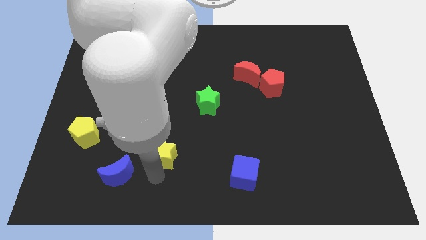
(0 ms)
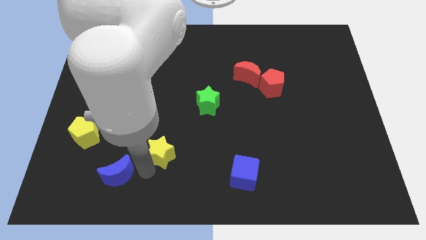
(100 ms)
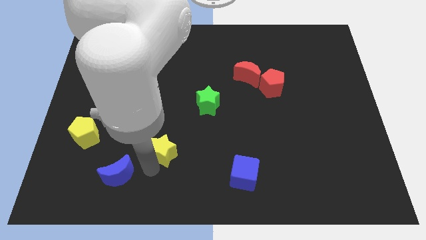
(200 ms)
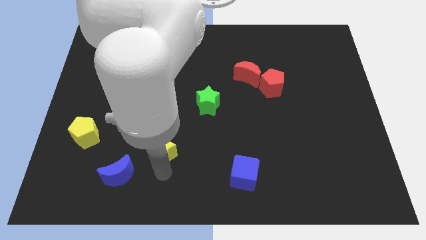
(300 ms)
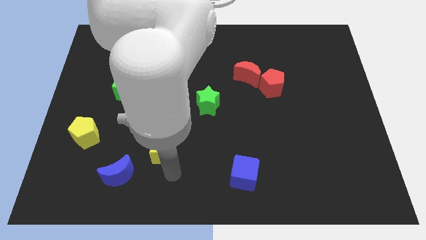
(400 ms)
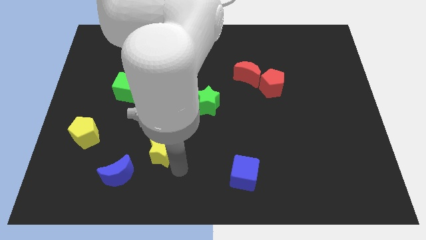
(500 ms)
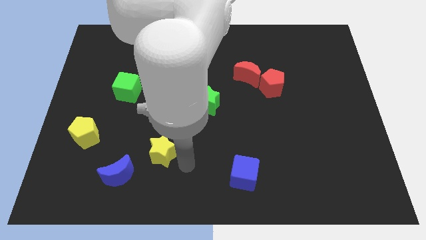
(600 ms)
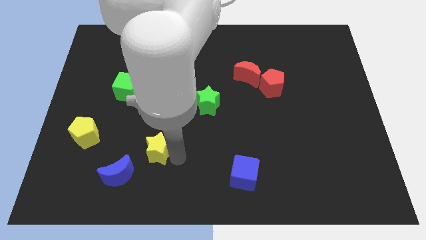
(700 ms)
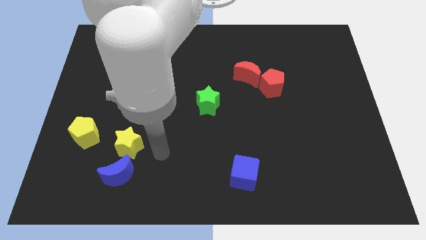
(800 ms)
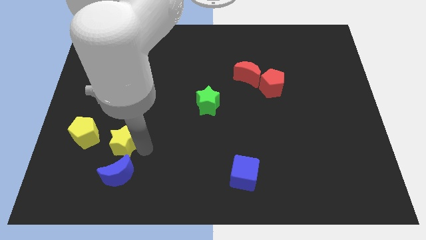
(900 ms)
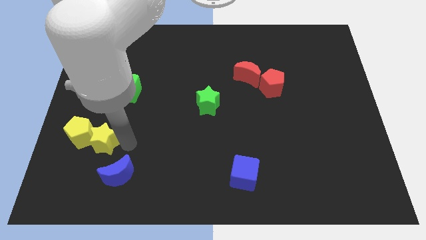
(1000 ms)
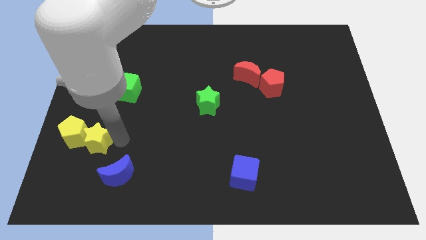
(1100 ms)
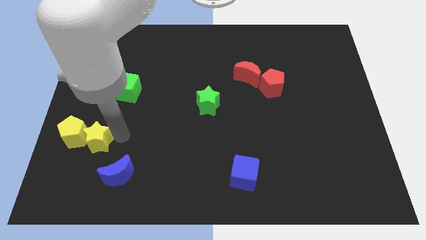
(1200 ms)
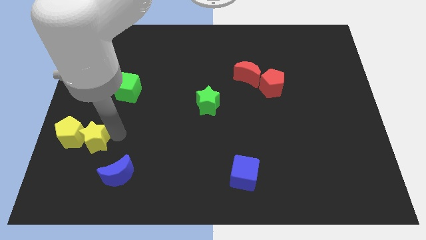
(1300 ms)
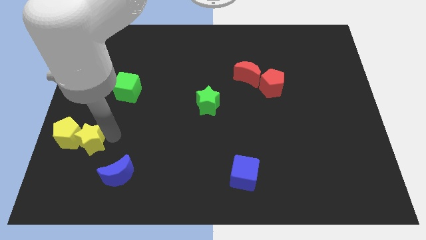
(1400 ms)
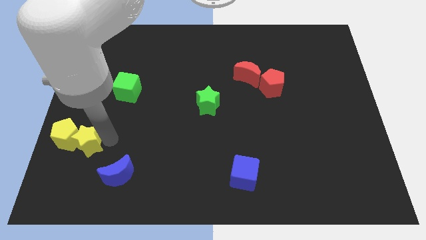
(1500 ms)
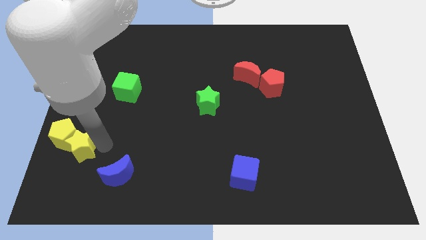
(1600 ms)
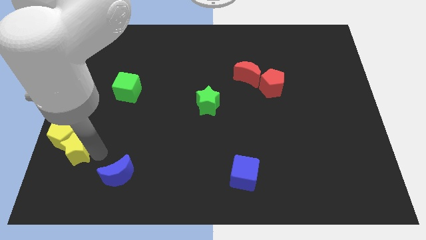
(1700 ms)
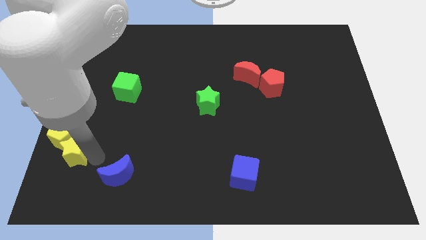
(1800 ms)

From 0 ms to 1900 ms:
push the yellow star into the yellow pentagon towards the bottom left

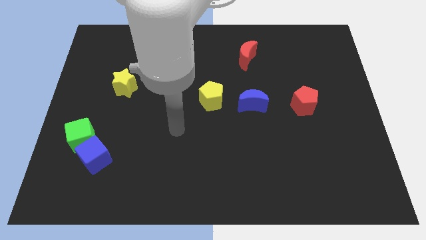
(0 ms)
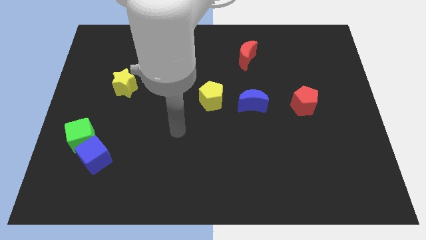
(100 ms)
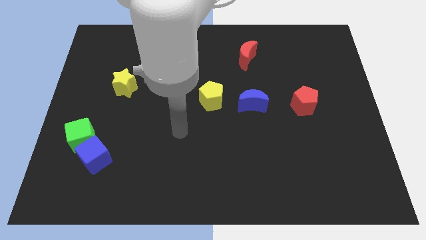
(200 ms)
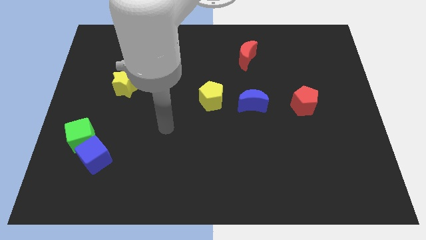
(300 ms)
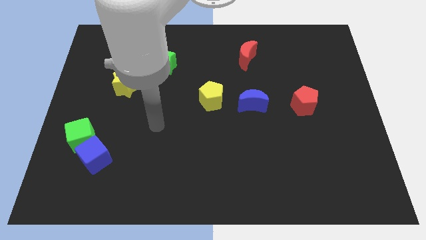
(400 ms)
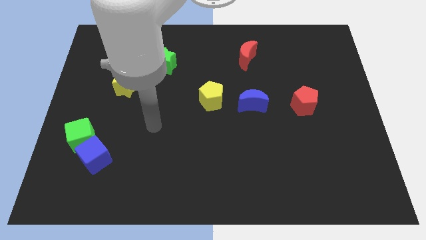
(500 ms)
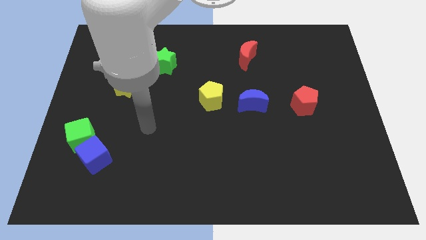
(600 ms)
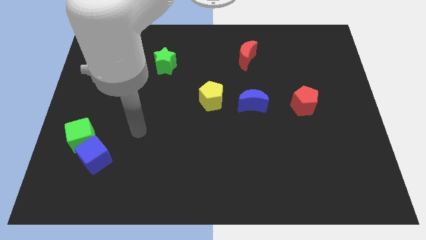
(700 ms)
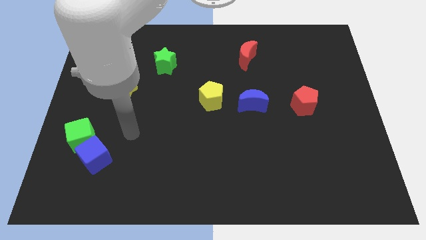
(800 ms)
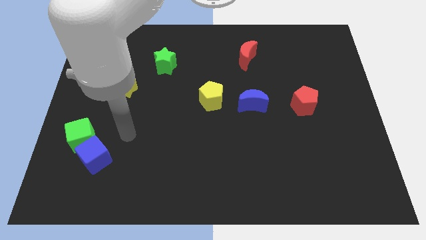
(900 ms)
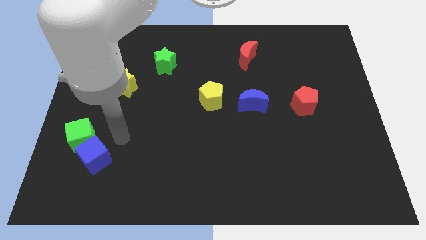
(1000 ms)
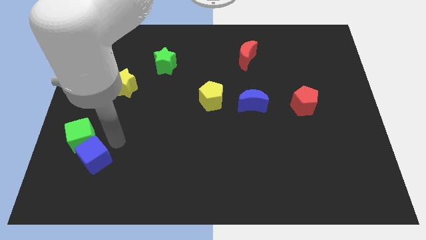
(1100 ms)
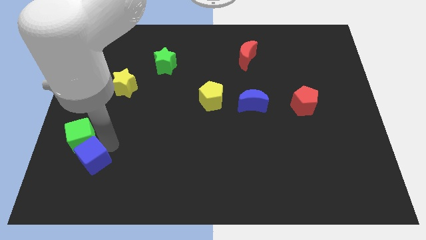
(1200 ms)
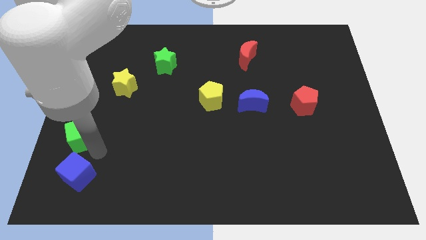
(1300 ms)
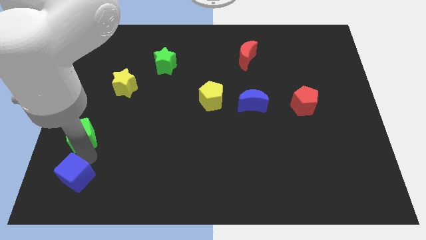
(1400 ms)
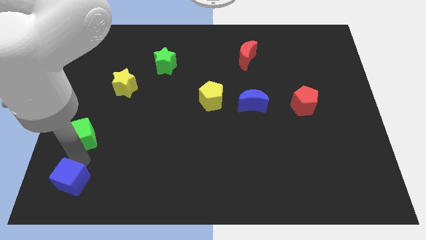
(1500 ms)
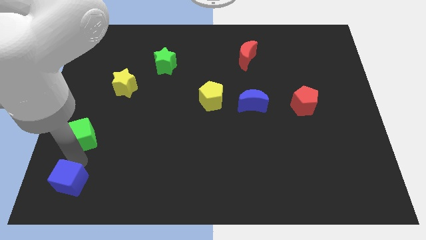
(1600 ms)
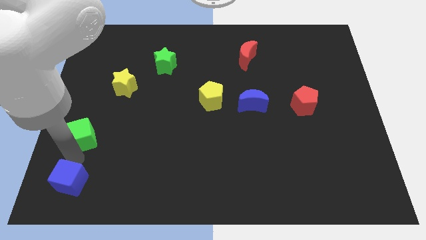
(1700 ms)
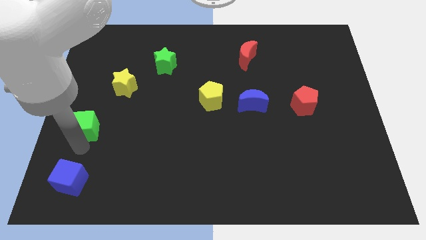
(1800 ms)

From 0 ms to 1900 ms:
push the blue cube away from the green cube

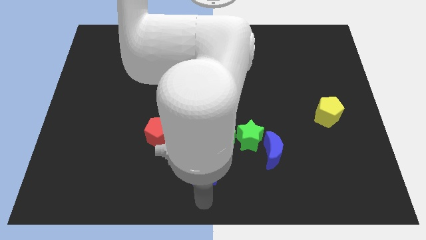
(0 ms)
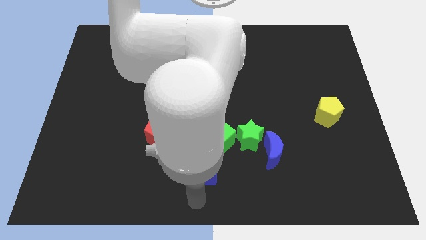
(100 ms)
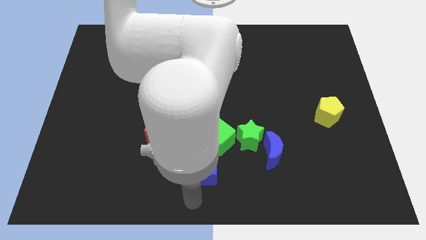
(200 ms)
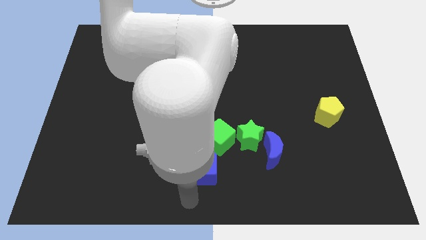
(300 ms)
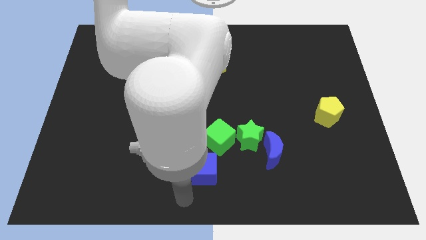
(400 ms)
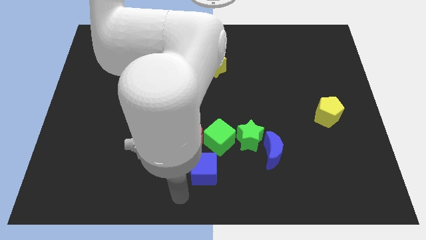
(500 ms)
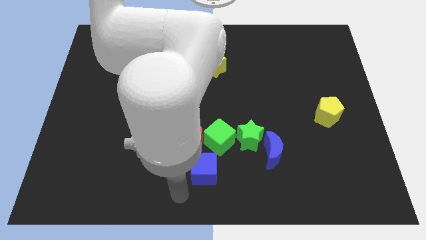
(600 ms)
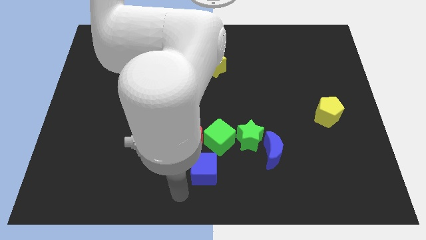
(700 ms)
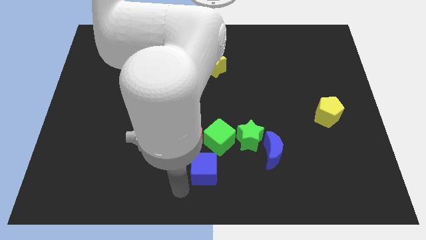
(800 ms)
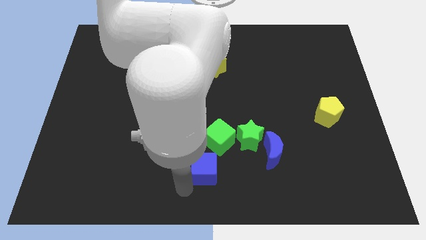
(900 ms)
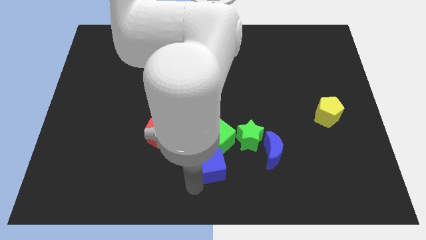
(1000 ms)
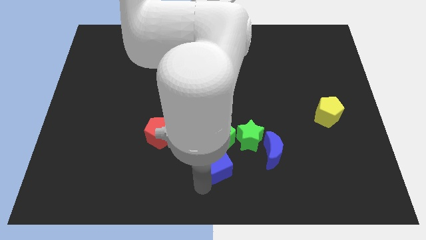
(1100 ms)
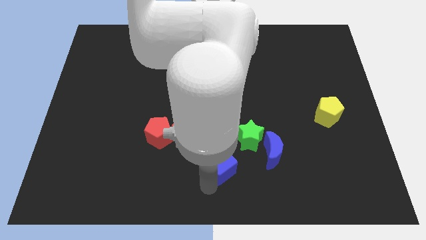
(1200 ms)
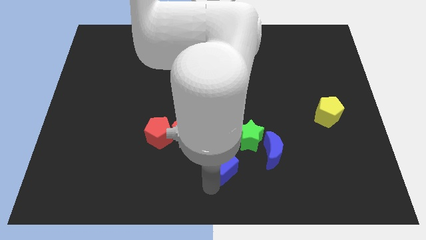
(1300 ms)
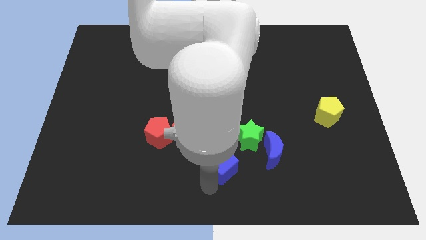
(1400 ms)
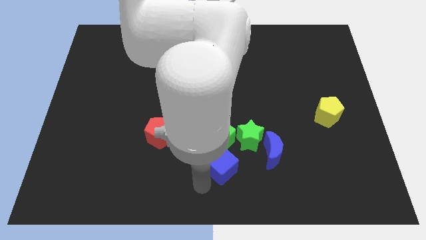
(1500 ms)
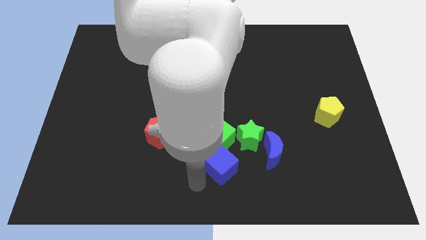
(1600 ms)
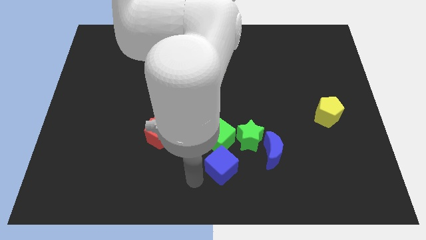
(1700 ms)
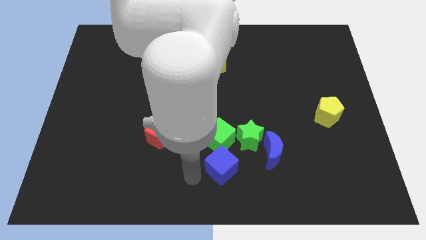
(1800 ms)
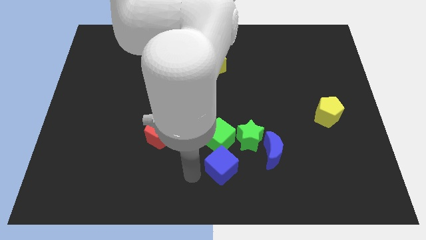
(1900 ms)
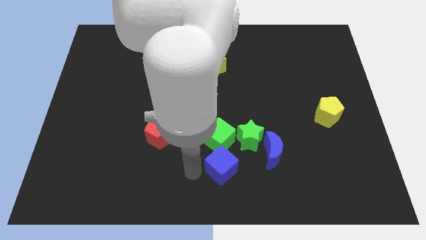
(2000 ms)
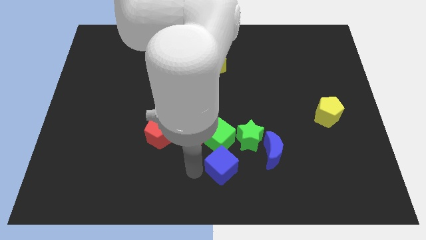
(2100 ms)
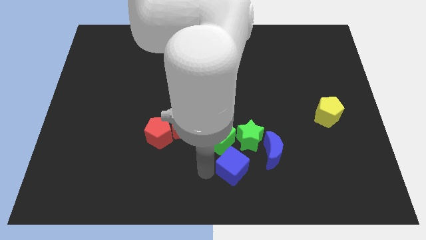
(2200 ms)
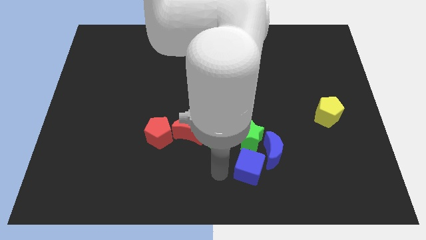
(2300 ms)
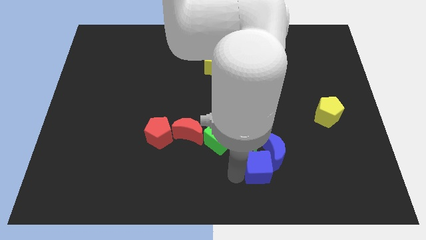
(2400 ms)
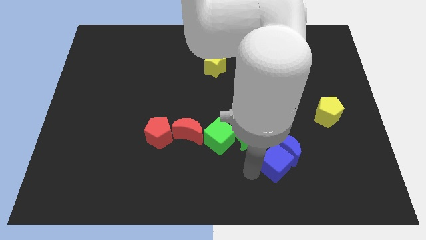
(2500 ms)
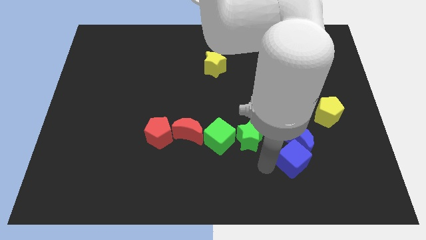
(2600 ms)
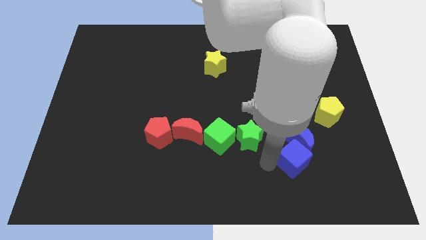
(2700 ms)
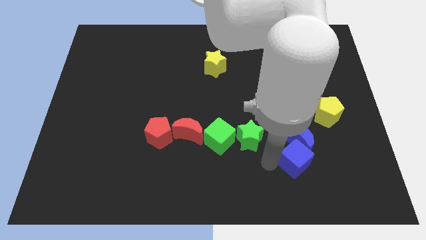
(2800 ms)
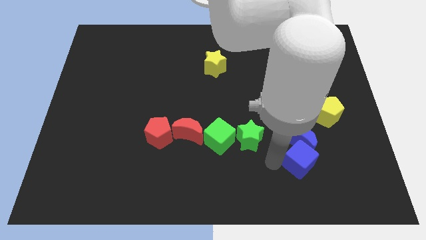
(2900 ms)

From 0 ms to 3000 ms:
push the blue cube into blue crescent

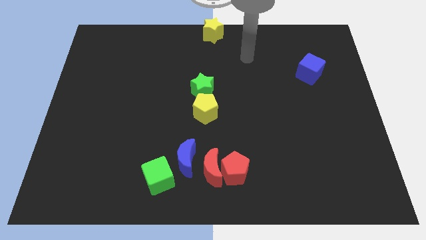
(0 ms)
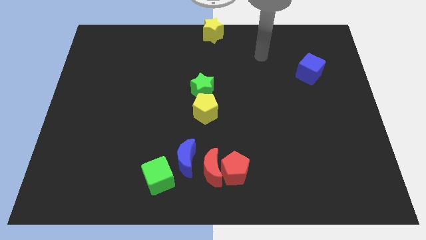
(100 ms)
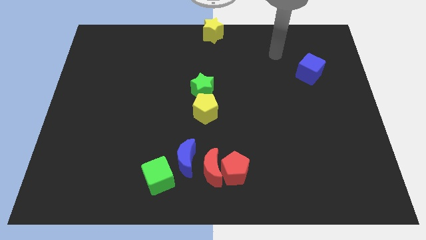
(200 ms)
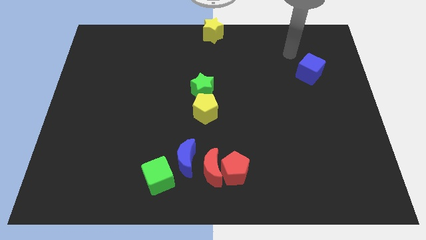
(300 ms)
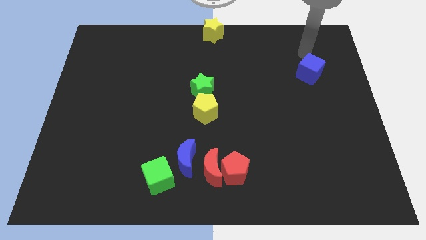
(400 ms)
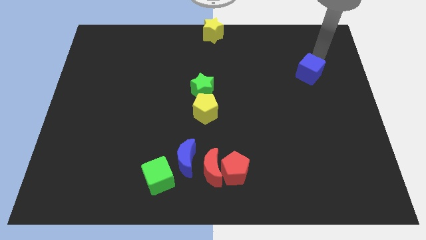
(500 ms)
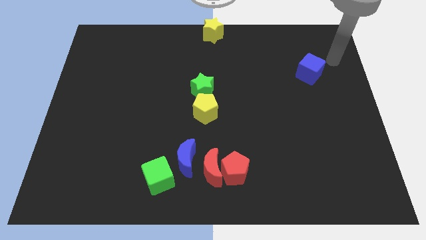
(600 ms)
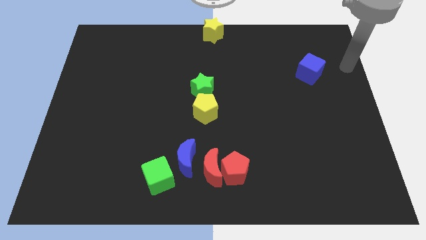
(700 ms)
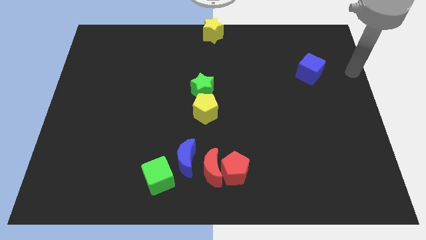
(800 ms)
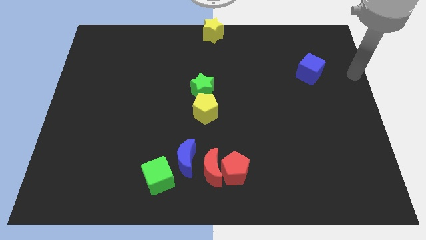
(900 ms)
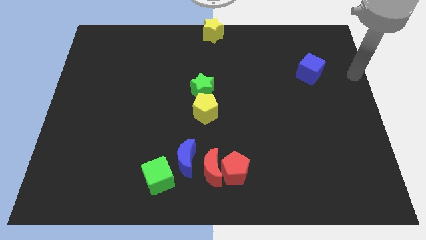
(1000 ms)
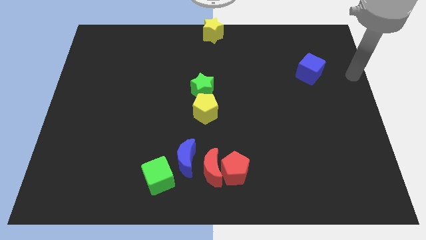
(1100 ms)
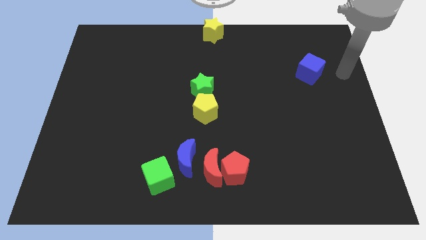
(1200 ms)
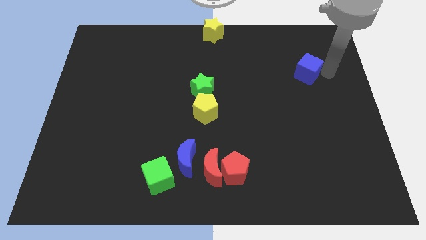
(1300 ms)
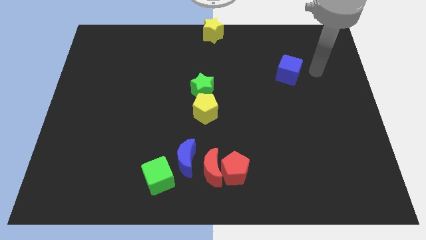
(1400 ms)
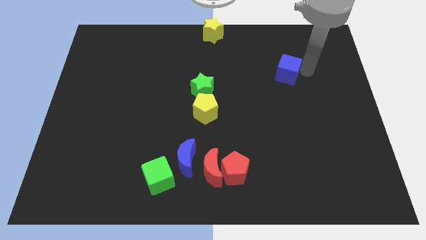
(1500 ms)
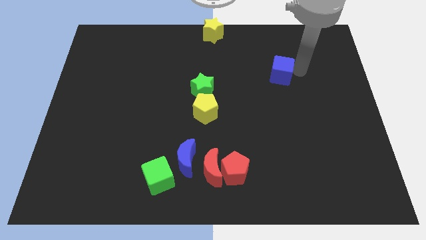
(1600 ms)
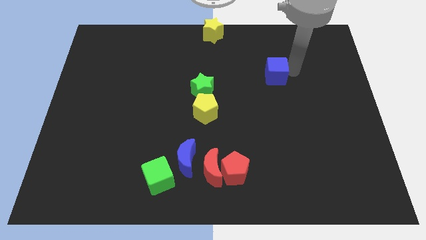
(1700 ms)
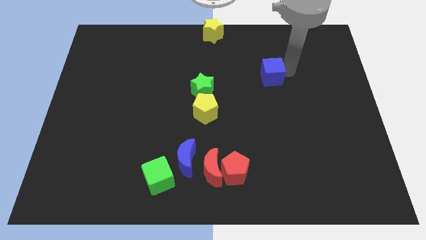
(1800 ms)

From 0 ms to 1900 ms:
push the blue cube slightly to the left

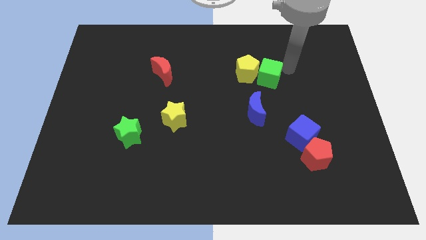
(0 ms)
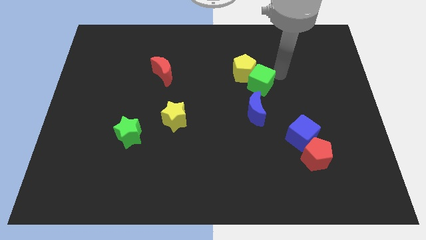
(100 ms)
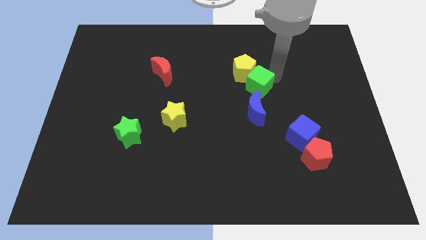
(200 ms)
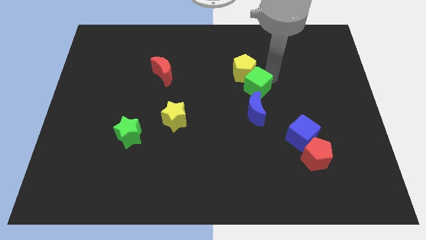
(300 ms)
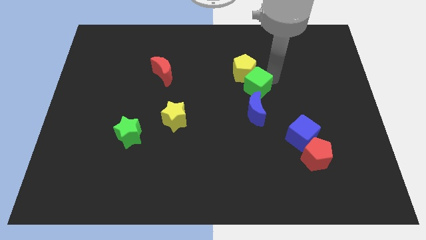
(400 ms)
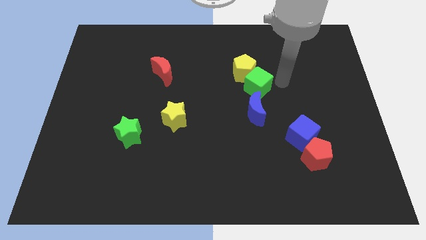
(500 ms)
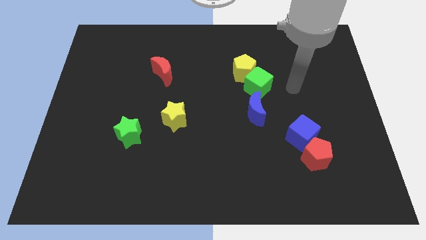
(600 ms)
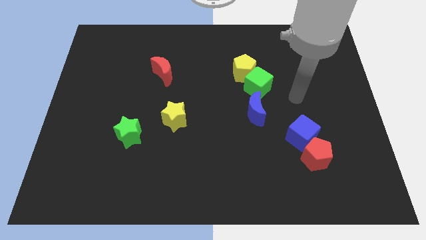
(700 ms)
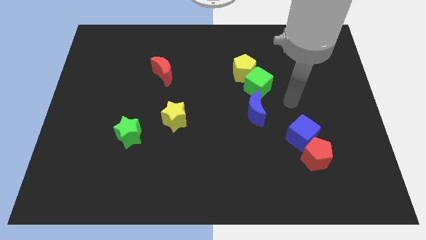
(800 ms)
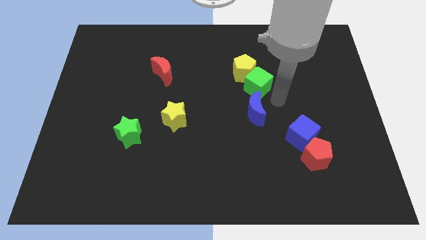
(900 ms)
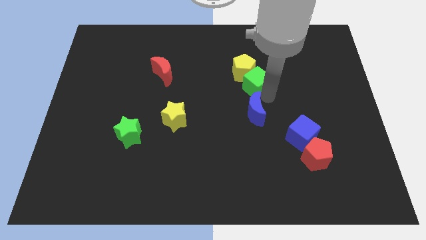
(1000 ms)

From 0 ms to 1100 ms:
place the green cube top to the blue crescent
